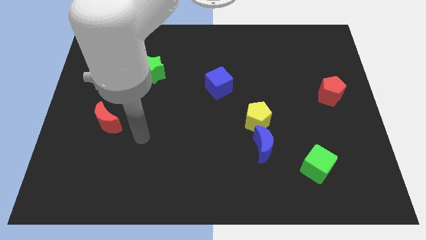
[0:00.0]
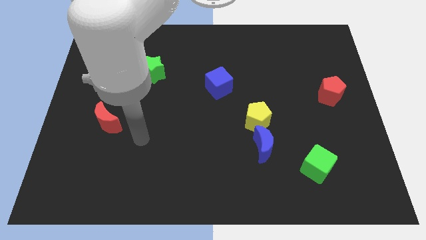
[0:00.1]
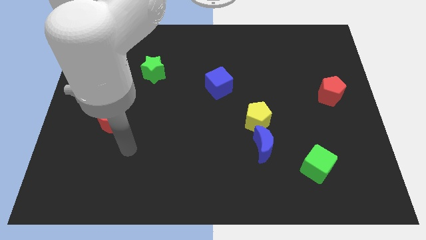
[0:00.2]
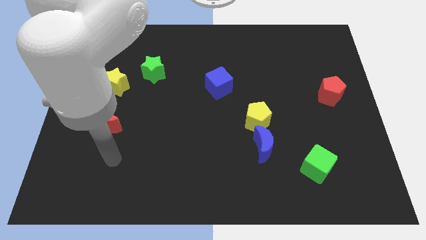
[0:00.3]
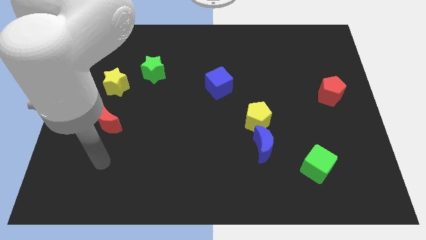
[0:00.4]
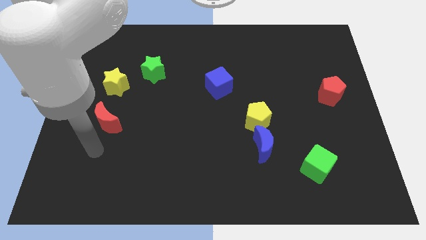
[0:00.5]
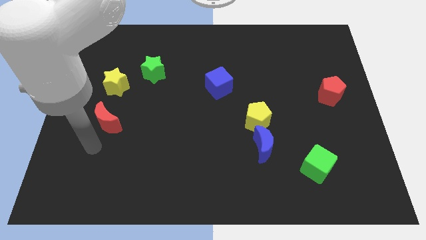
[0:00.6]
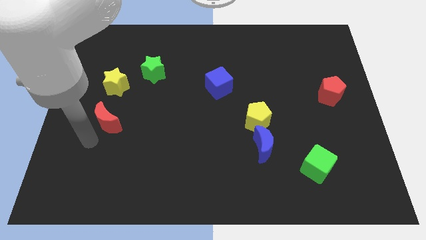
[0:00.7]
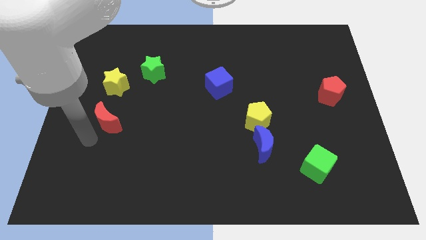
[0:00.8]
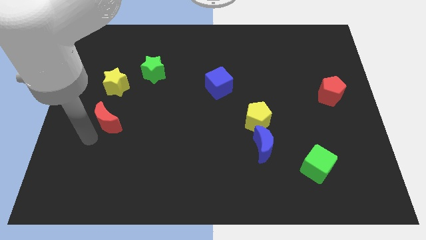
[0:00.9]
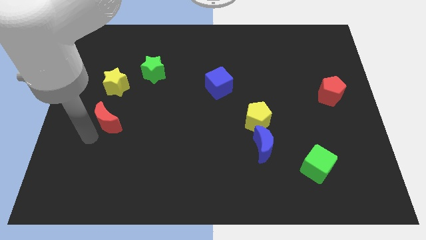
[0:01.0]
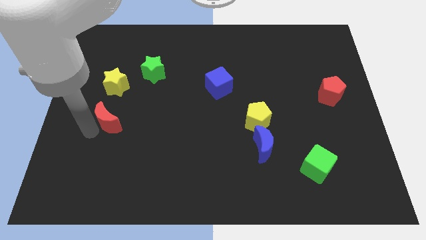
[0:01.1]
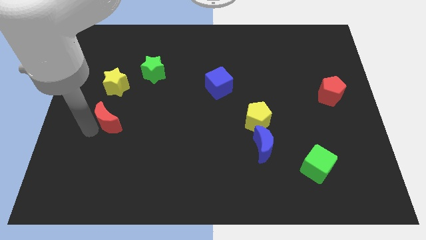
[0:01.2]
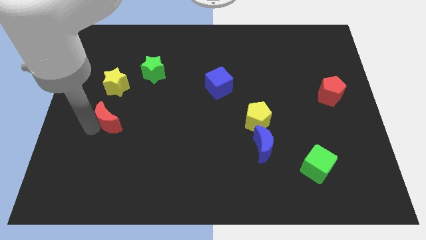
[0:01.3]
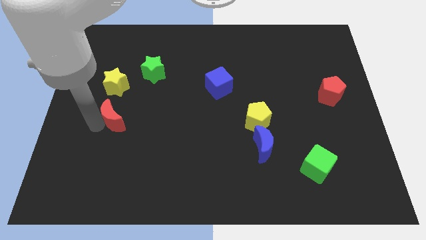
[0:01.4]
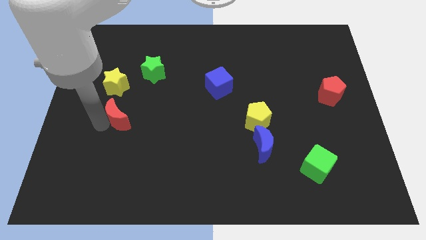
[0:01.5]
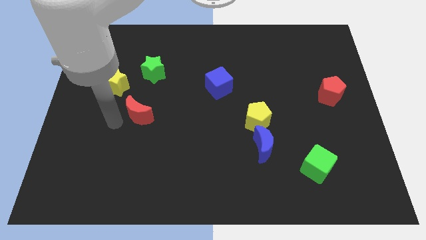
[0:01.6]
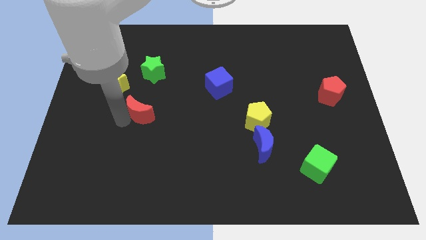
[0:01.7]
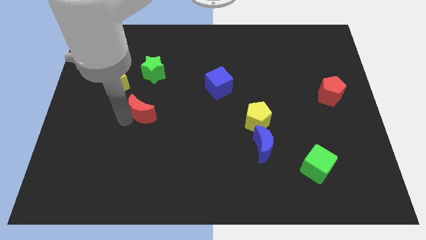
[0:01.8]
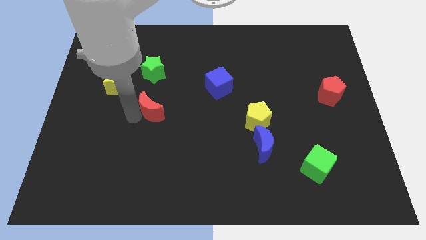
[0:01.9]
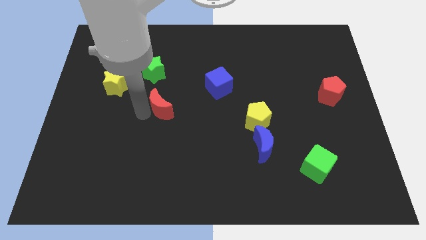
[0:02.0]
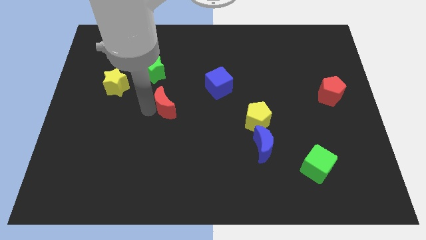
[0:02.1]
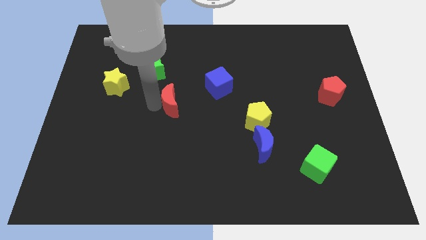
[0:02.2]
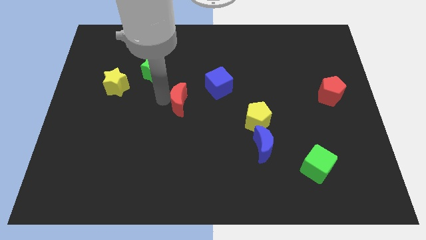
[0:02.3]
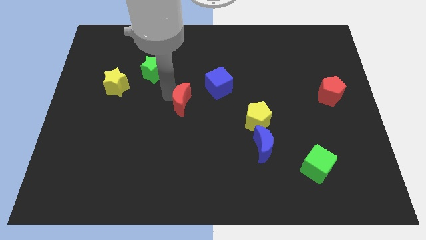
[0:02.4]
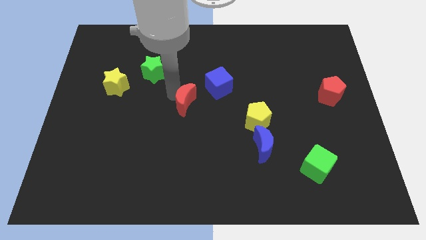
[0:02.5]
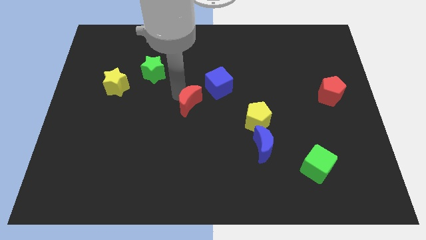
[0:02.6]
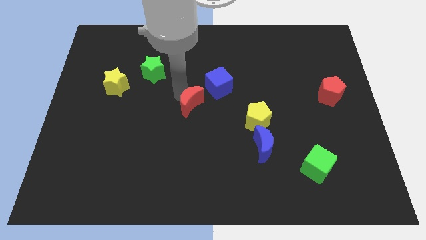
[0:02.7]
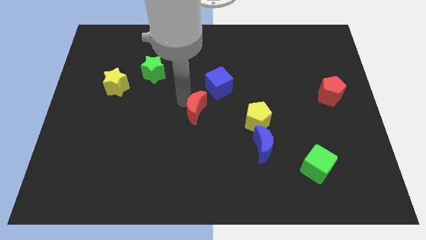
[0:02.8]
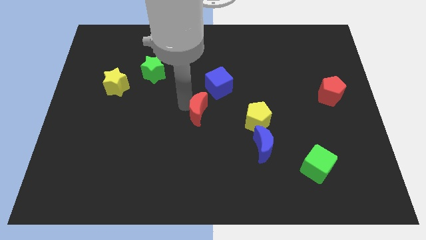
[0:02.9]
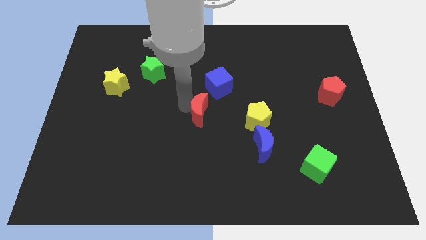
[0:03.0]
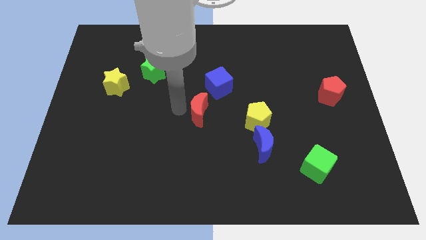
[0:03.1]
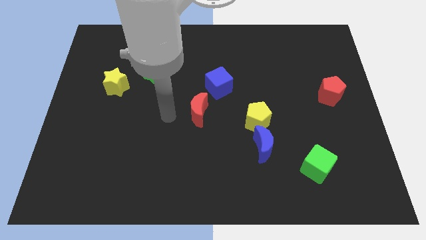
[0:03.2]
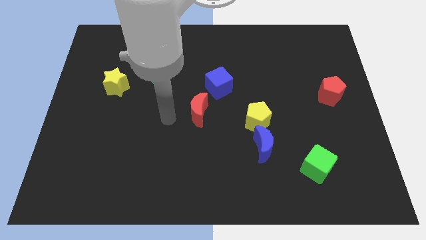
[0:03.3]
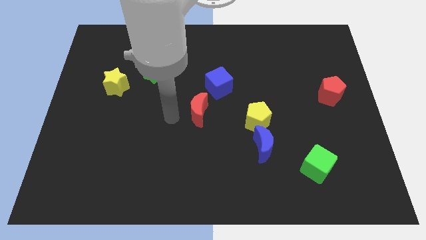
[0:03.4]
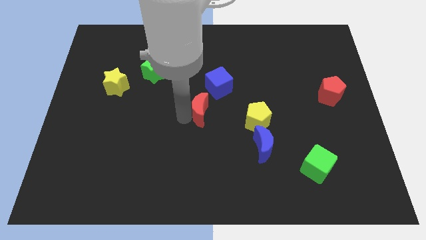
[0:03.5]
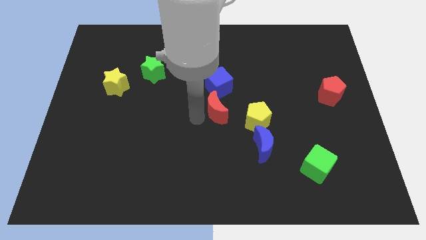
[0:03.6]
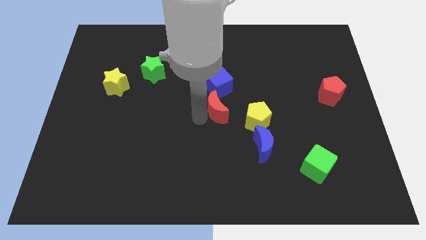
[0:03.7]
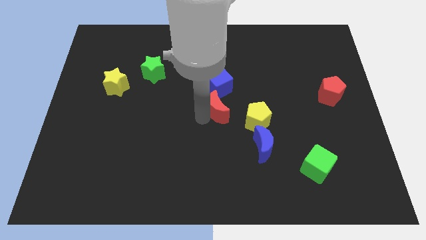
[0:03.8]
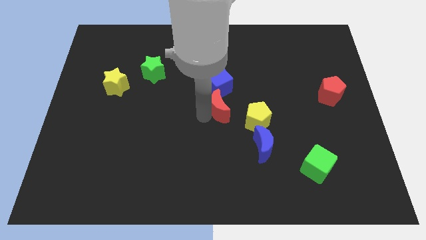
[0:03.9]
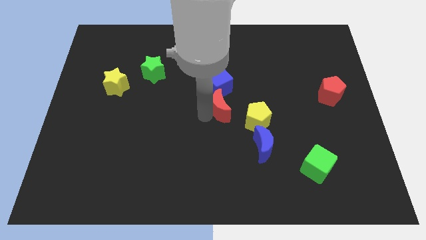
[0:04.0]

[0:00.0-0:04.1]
place the red crescent at the center of the board

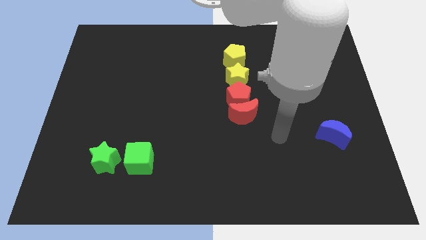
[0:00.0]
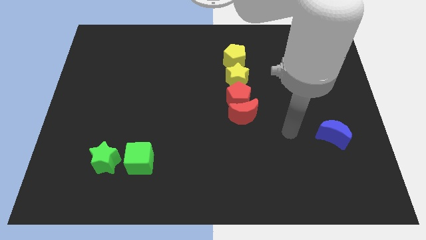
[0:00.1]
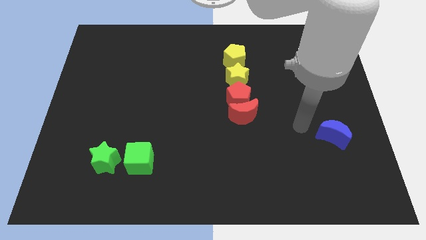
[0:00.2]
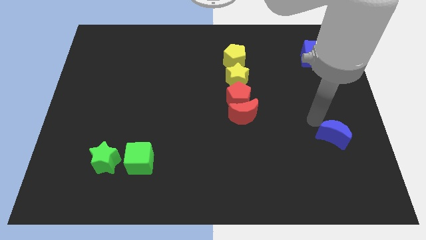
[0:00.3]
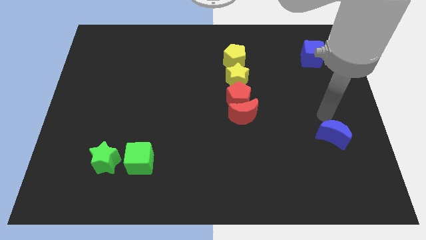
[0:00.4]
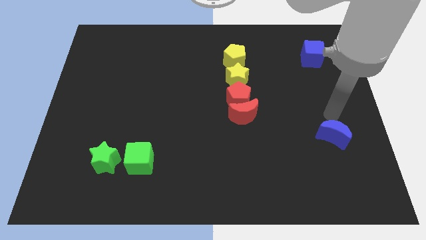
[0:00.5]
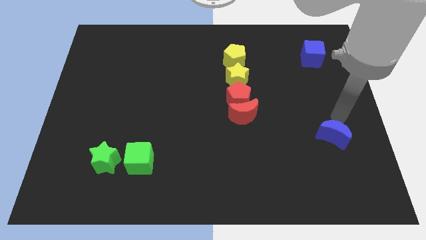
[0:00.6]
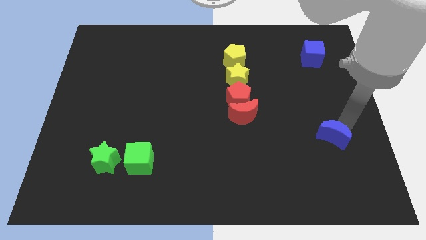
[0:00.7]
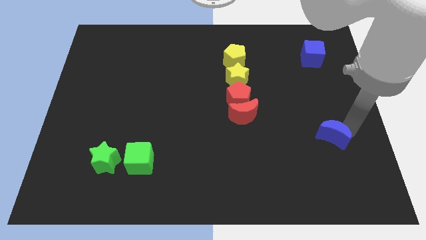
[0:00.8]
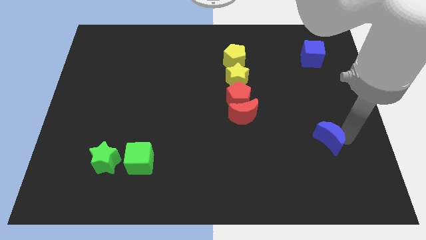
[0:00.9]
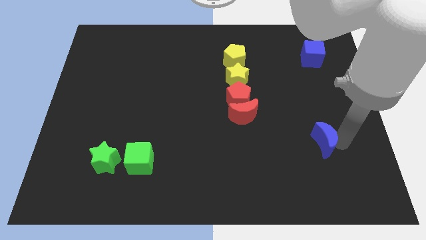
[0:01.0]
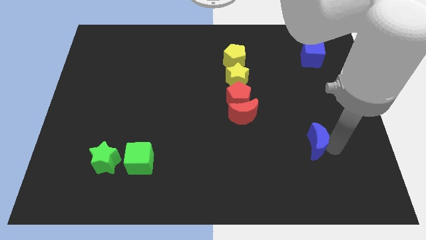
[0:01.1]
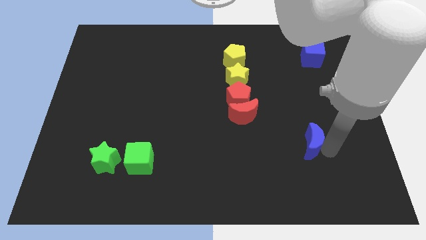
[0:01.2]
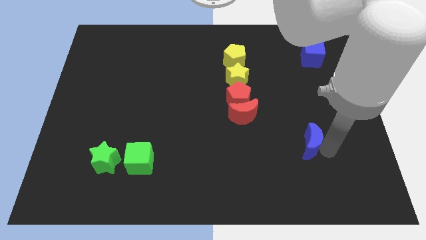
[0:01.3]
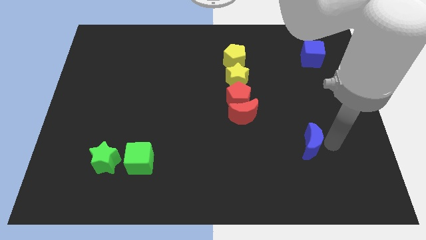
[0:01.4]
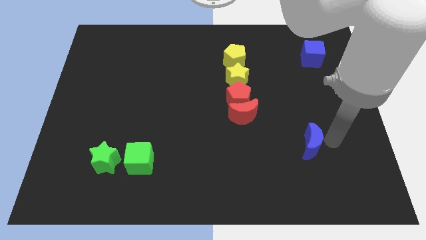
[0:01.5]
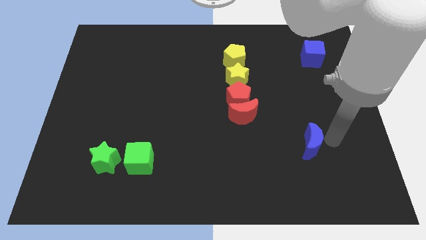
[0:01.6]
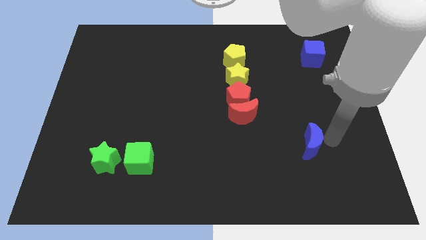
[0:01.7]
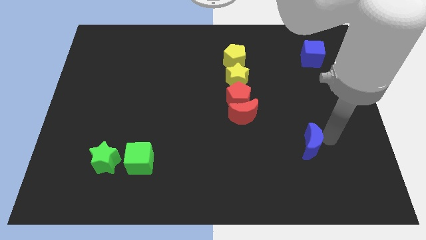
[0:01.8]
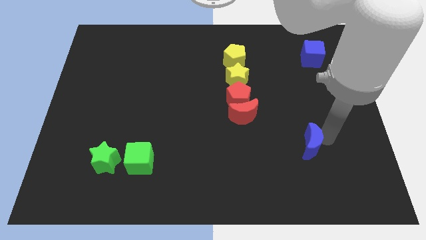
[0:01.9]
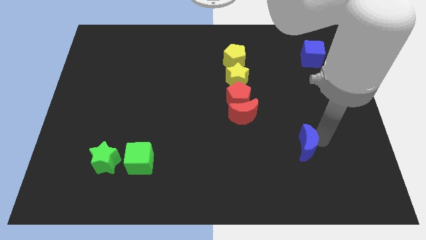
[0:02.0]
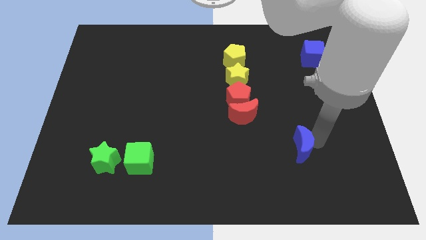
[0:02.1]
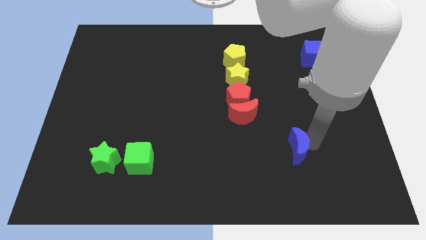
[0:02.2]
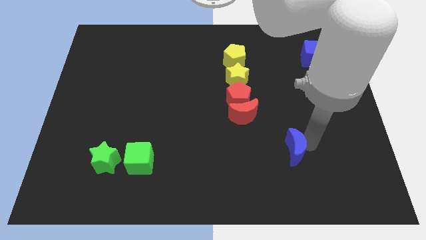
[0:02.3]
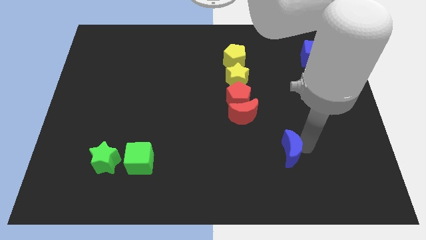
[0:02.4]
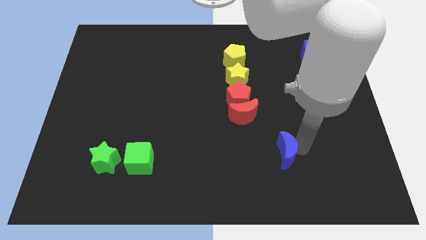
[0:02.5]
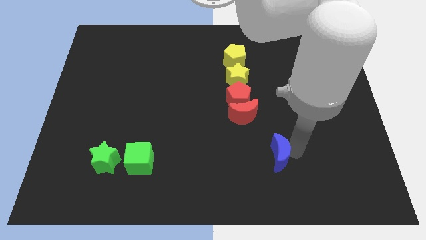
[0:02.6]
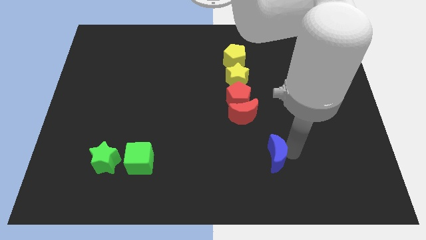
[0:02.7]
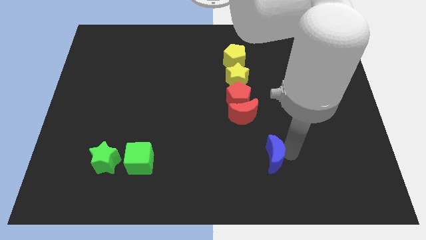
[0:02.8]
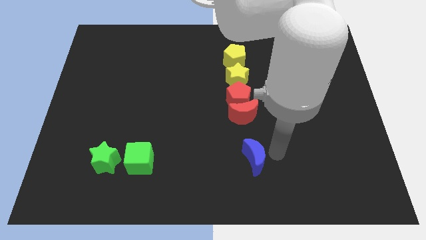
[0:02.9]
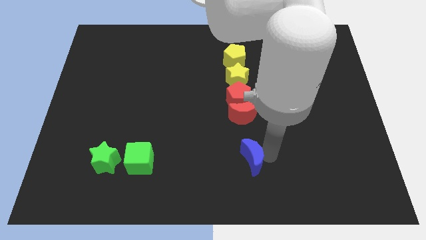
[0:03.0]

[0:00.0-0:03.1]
place the blue moon below the red moon

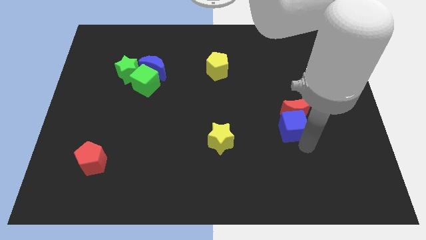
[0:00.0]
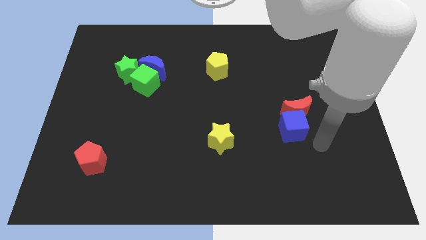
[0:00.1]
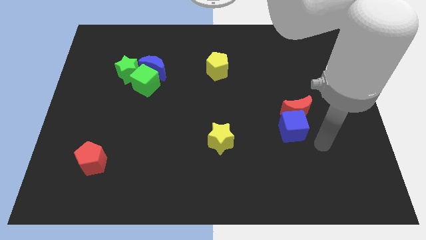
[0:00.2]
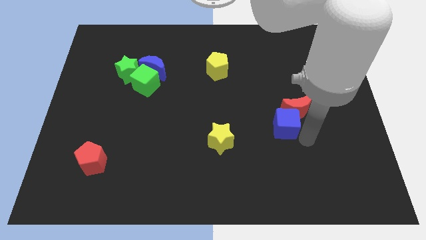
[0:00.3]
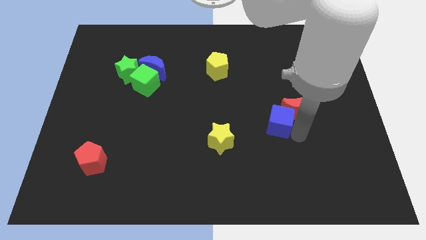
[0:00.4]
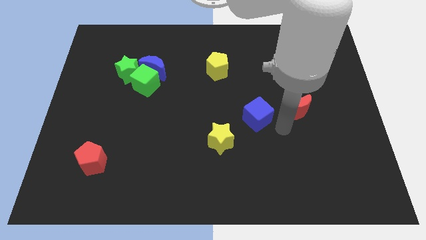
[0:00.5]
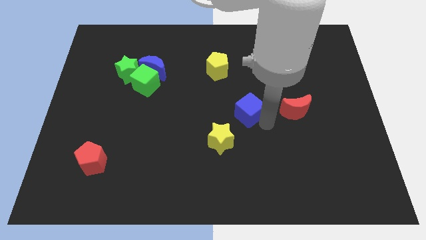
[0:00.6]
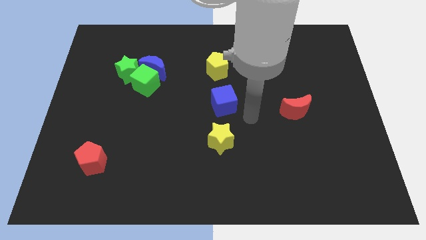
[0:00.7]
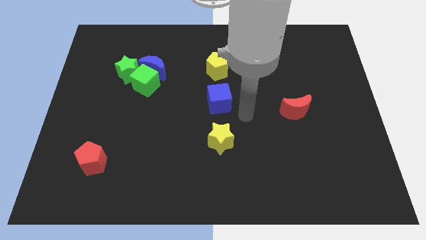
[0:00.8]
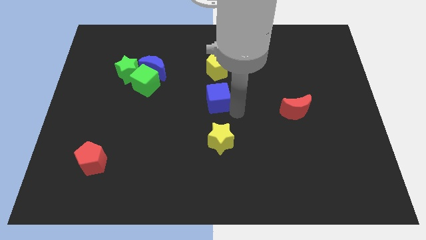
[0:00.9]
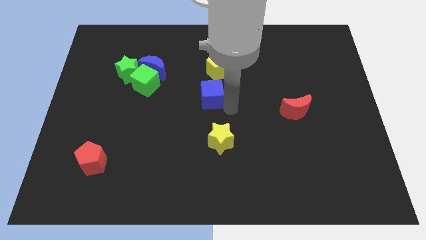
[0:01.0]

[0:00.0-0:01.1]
separate the blue cube and red moon

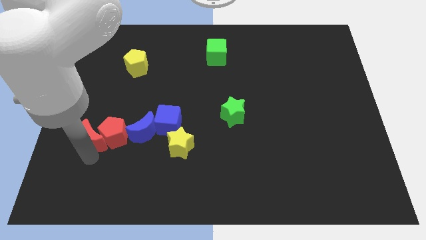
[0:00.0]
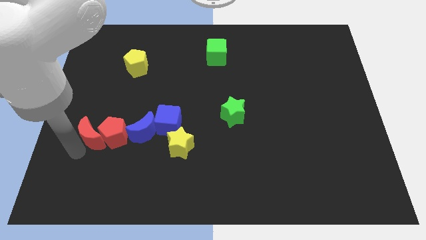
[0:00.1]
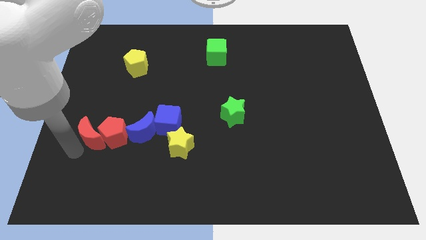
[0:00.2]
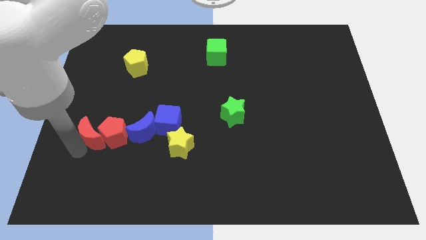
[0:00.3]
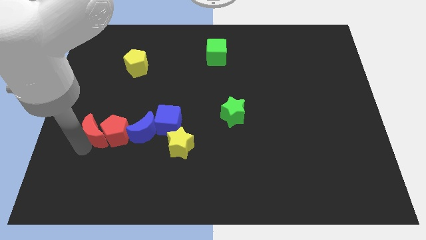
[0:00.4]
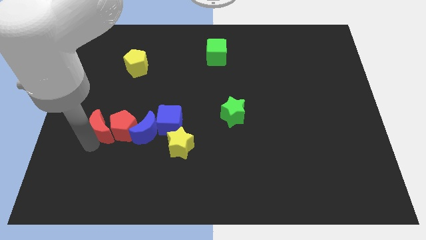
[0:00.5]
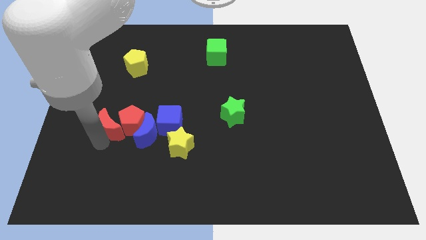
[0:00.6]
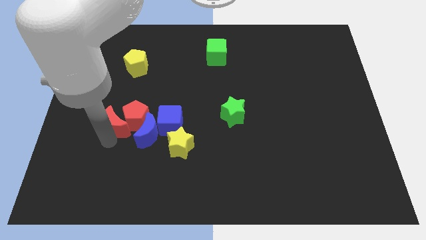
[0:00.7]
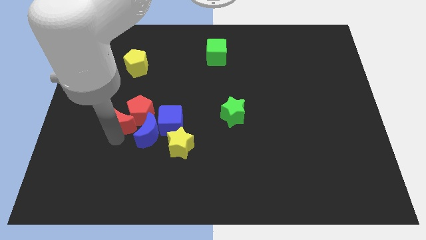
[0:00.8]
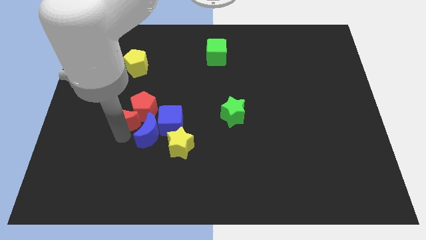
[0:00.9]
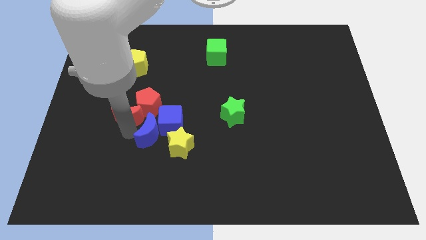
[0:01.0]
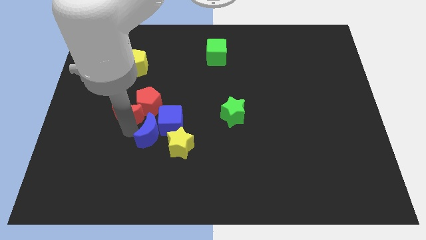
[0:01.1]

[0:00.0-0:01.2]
move the red blocks into the blue blocks
